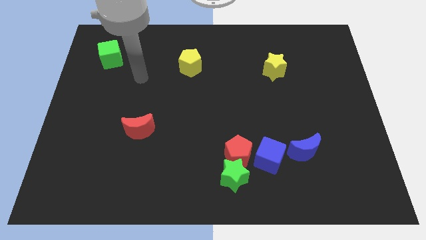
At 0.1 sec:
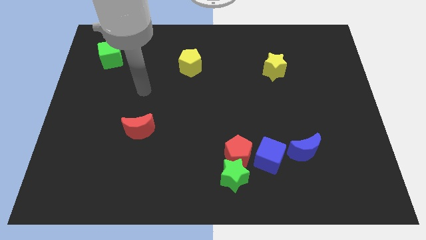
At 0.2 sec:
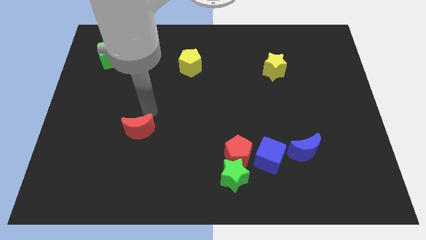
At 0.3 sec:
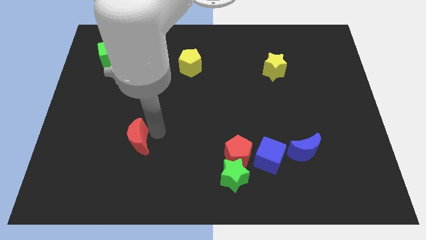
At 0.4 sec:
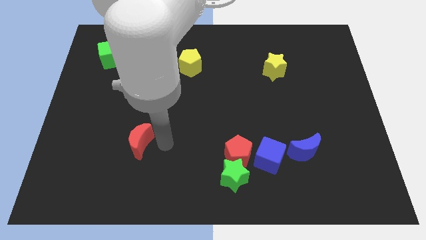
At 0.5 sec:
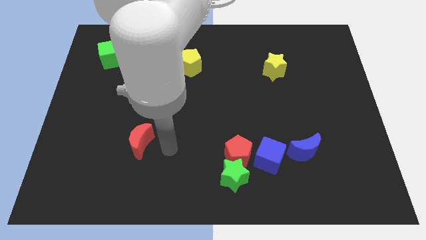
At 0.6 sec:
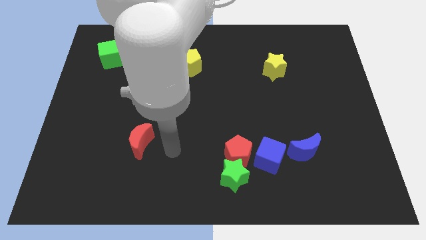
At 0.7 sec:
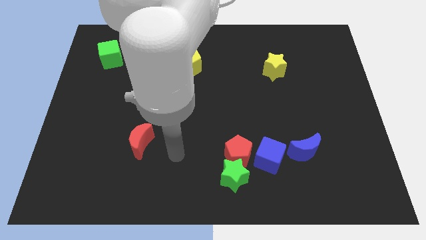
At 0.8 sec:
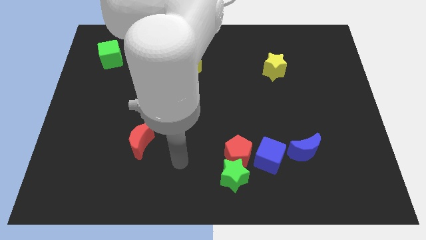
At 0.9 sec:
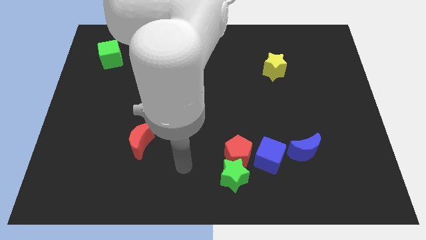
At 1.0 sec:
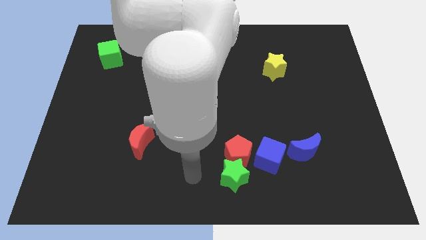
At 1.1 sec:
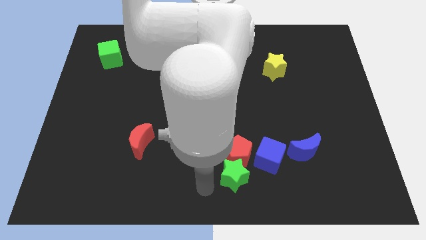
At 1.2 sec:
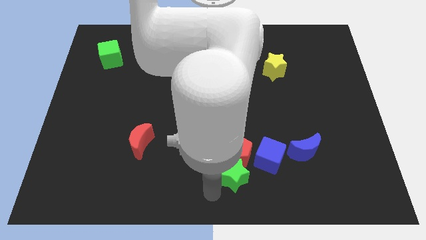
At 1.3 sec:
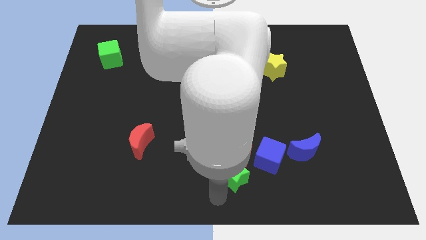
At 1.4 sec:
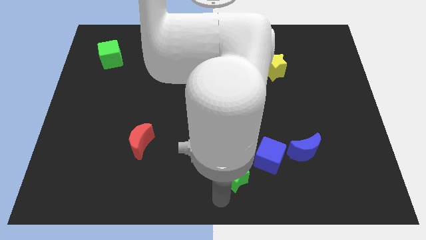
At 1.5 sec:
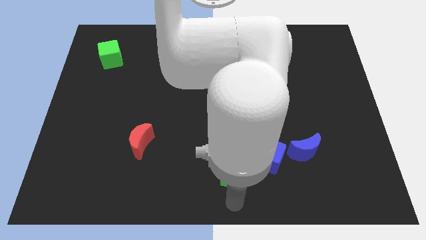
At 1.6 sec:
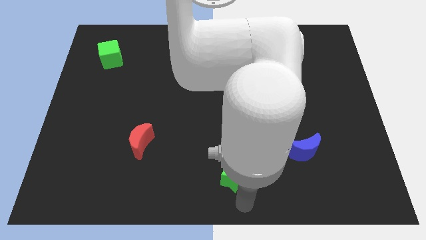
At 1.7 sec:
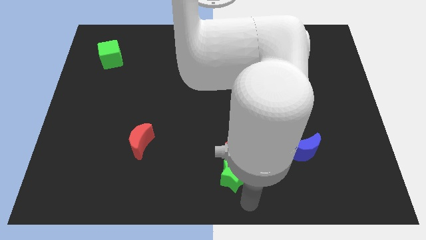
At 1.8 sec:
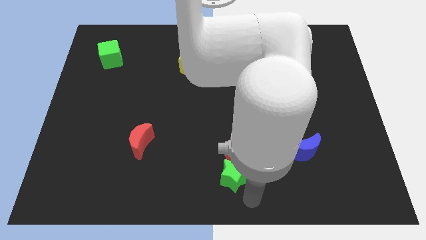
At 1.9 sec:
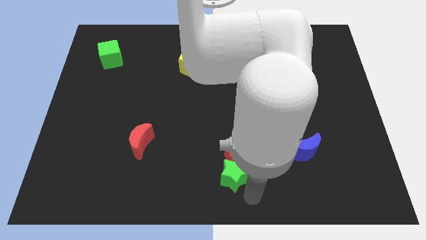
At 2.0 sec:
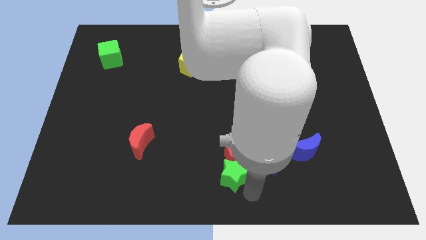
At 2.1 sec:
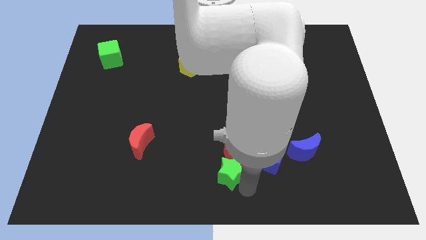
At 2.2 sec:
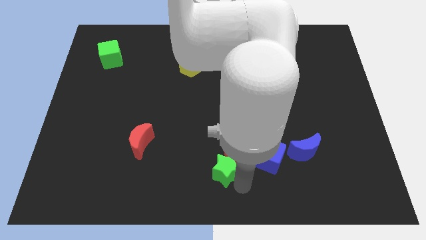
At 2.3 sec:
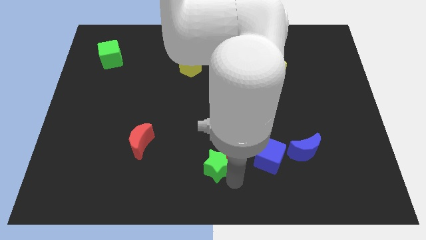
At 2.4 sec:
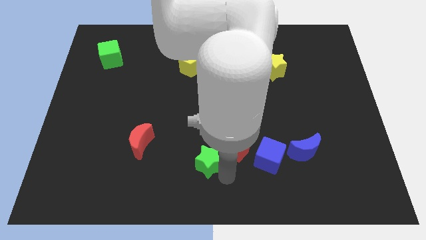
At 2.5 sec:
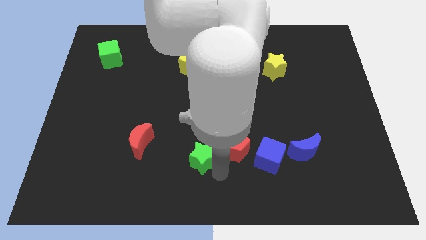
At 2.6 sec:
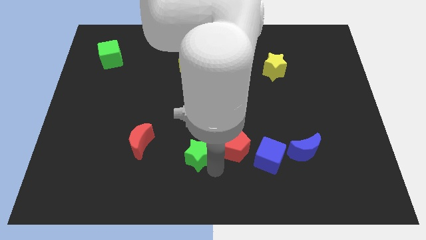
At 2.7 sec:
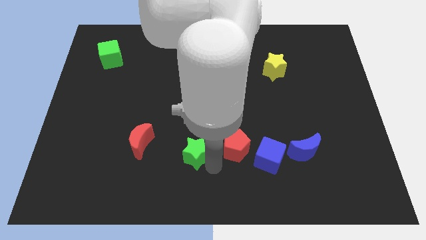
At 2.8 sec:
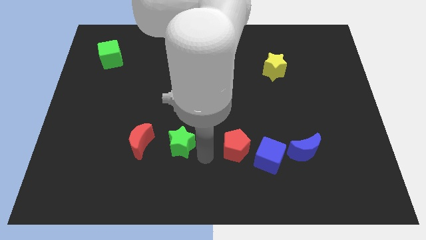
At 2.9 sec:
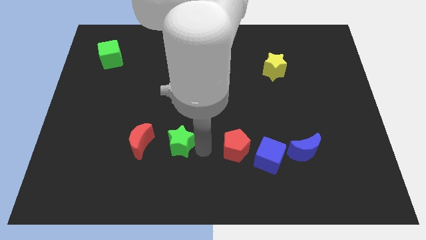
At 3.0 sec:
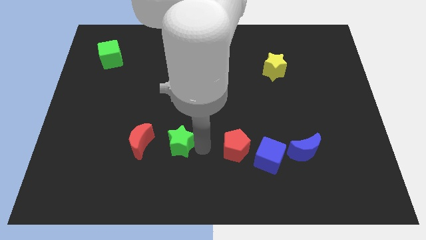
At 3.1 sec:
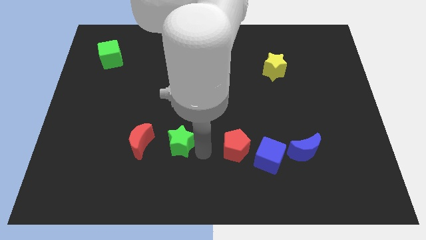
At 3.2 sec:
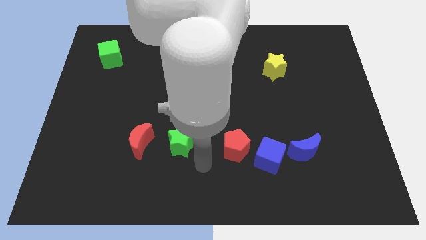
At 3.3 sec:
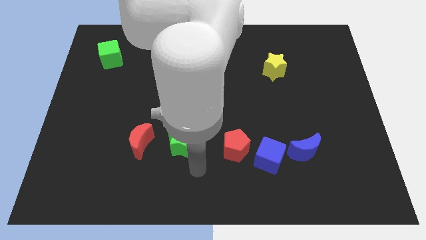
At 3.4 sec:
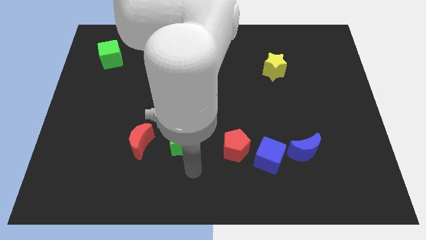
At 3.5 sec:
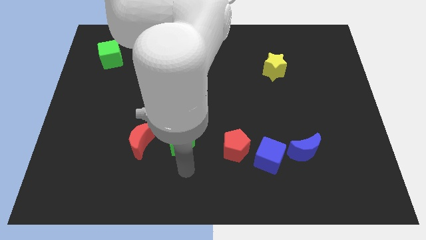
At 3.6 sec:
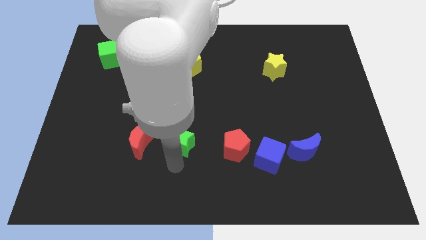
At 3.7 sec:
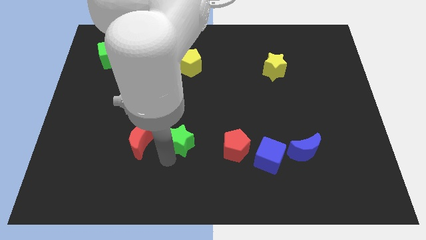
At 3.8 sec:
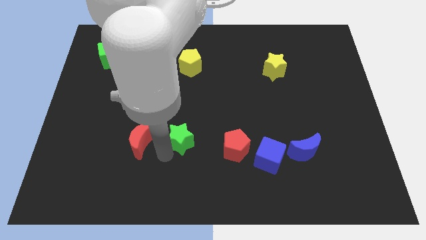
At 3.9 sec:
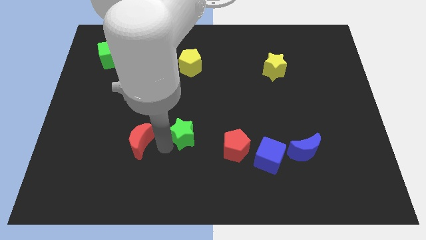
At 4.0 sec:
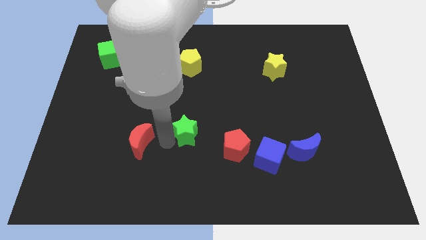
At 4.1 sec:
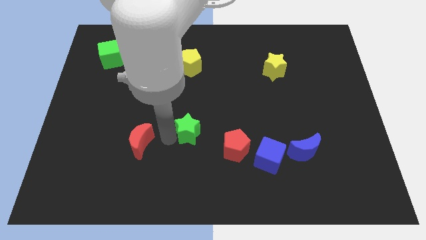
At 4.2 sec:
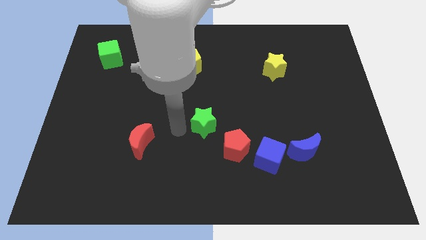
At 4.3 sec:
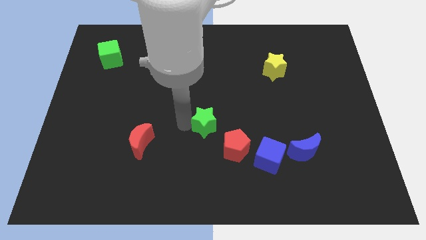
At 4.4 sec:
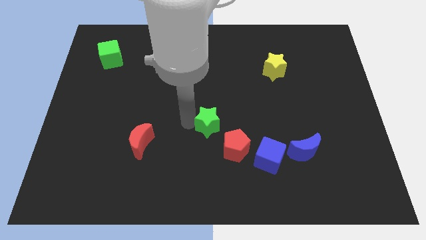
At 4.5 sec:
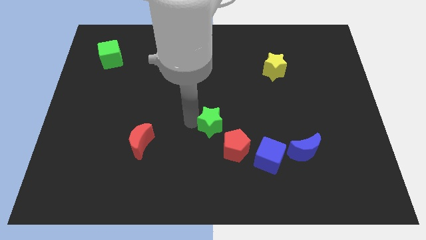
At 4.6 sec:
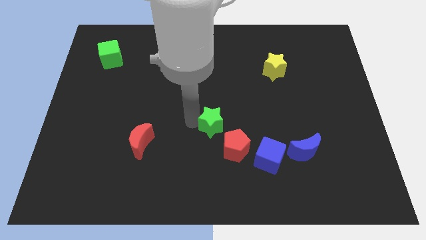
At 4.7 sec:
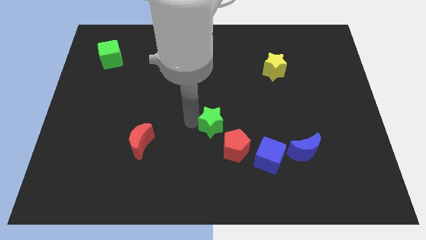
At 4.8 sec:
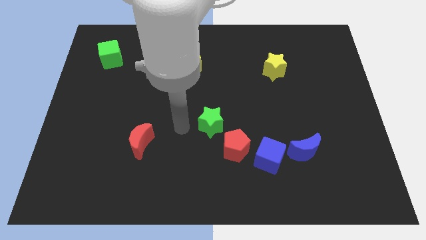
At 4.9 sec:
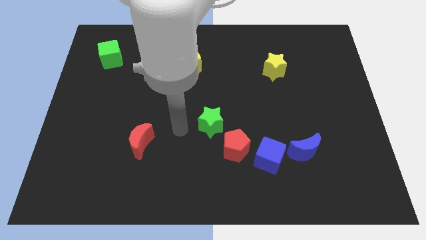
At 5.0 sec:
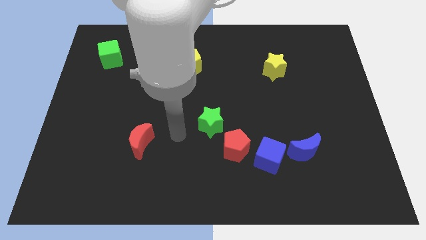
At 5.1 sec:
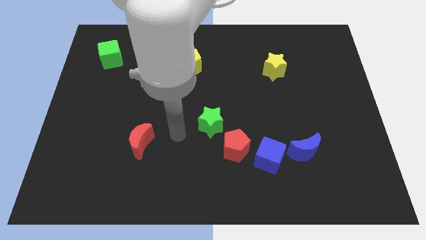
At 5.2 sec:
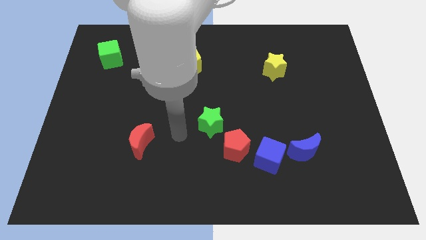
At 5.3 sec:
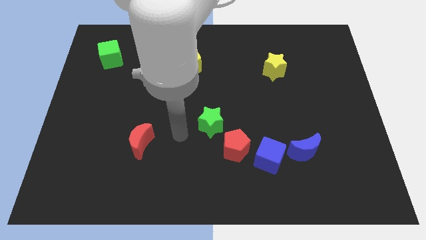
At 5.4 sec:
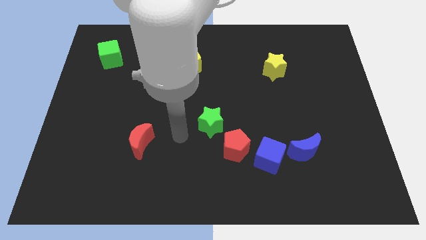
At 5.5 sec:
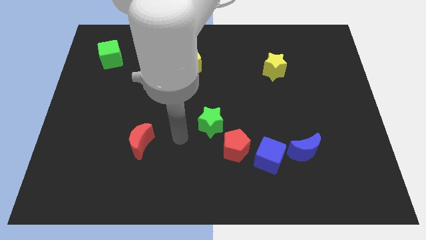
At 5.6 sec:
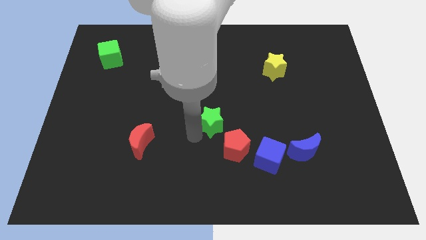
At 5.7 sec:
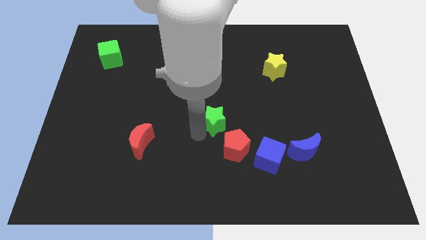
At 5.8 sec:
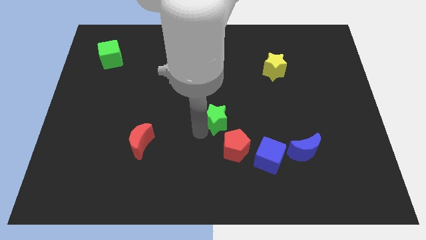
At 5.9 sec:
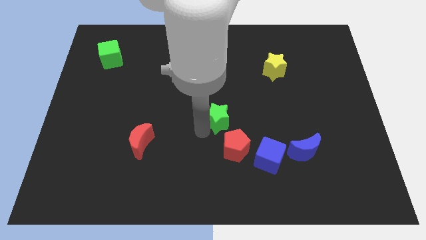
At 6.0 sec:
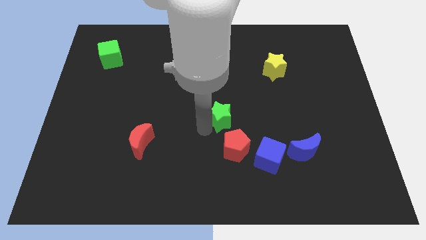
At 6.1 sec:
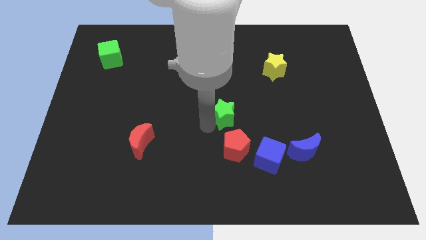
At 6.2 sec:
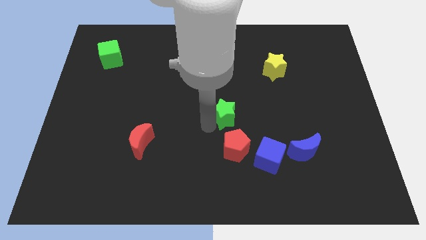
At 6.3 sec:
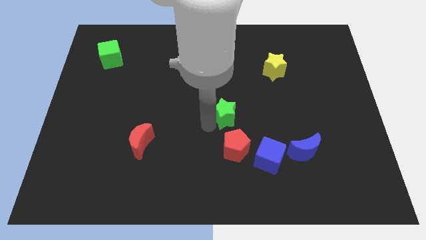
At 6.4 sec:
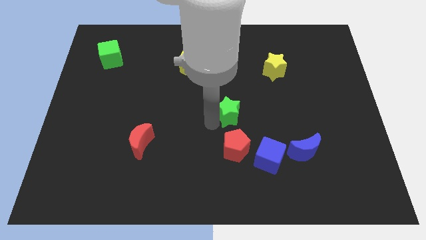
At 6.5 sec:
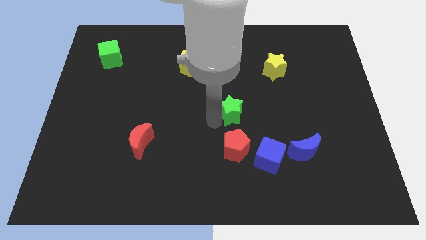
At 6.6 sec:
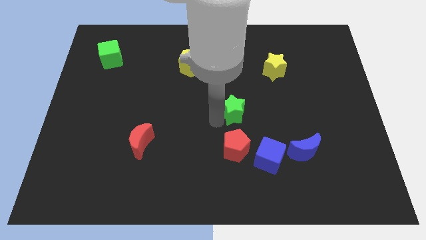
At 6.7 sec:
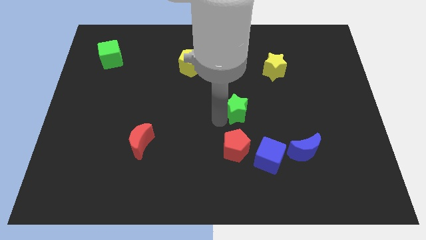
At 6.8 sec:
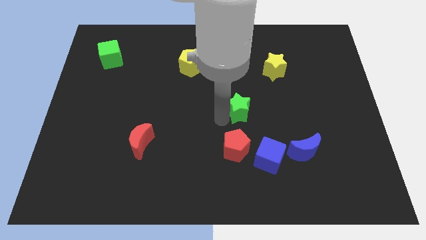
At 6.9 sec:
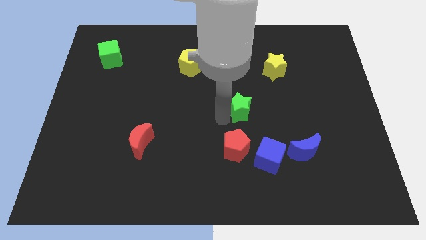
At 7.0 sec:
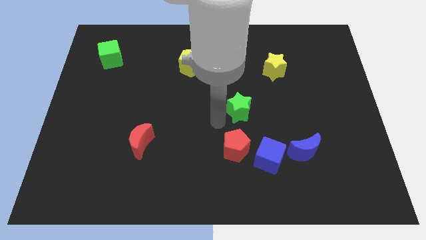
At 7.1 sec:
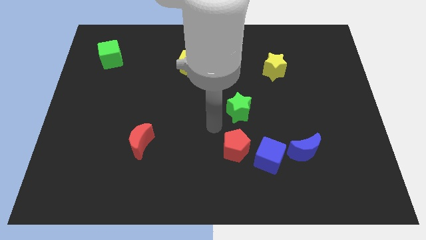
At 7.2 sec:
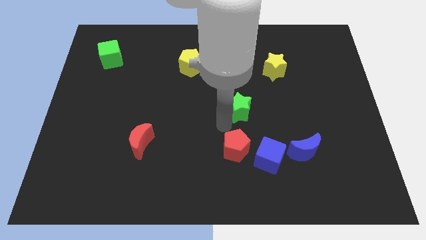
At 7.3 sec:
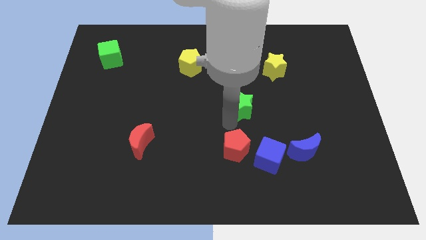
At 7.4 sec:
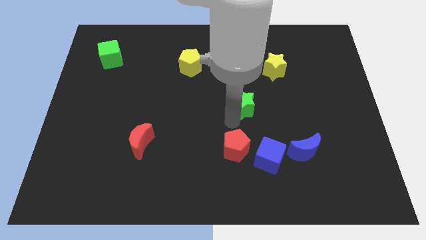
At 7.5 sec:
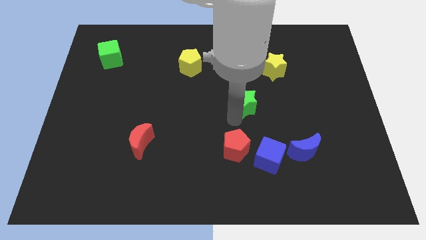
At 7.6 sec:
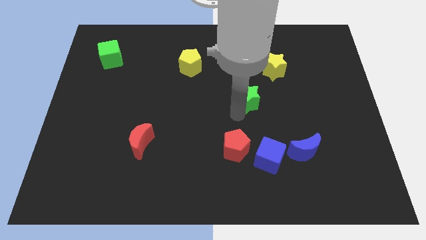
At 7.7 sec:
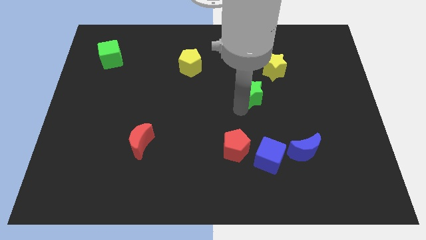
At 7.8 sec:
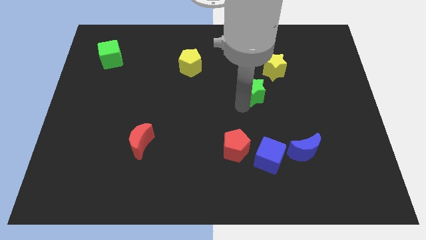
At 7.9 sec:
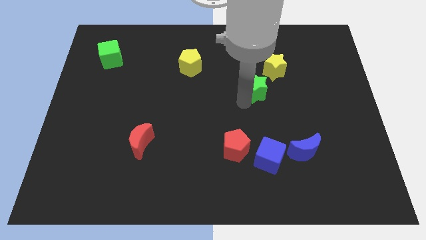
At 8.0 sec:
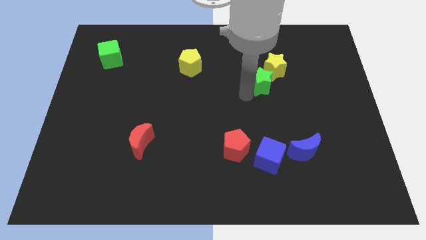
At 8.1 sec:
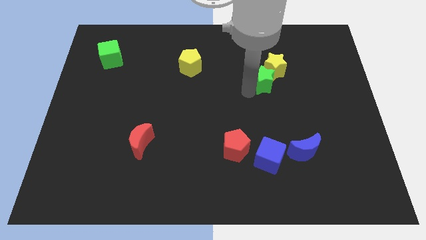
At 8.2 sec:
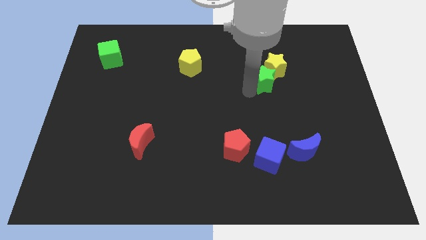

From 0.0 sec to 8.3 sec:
slide the green star close to the yellow star
